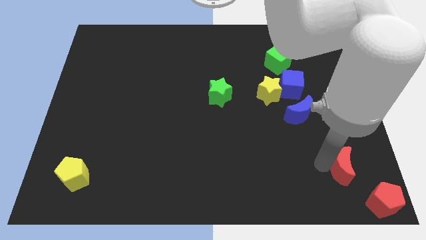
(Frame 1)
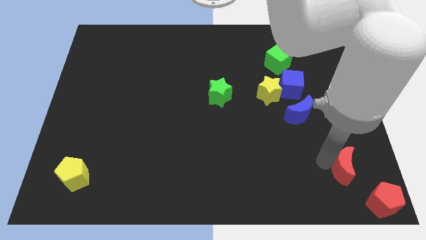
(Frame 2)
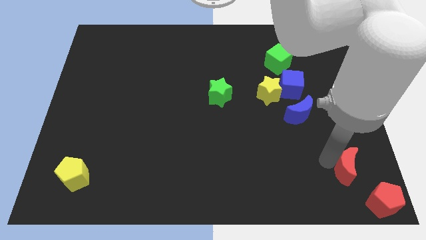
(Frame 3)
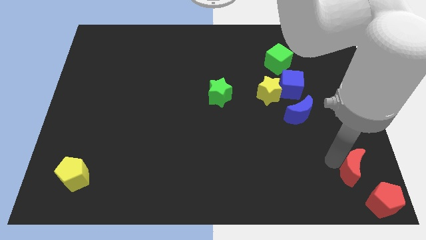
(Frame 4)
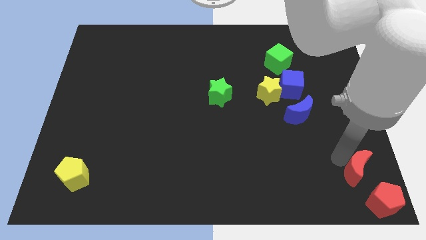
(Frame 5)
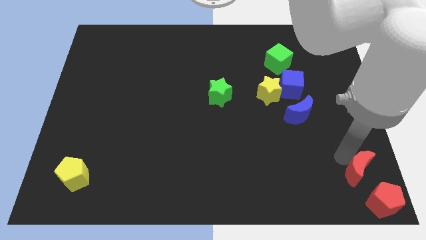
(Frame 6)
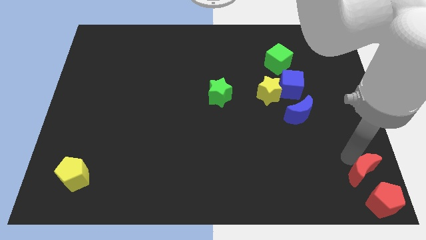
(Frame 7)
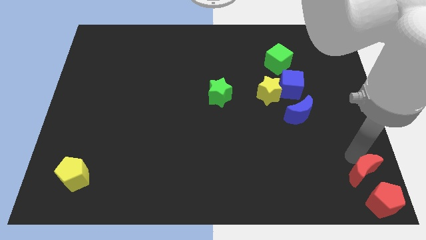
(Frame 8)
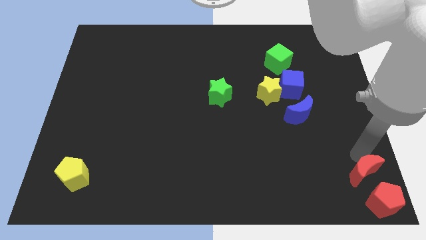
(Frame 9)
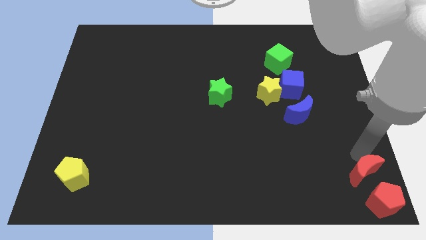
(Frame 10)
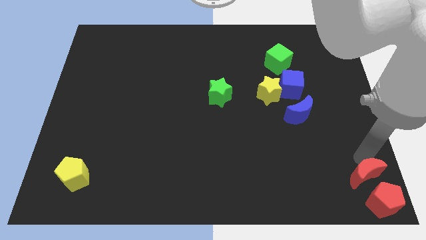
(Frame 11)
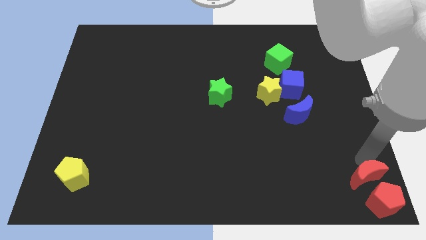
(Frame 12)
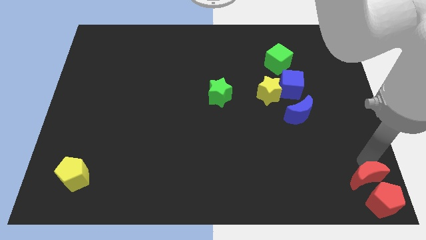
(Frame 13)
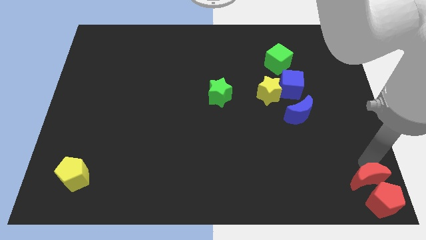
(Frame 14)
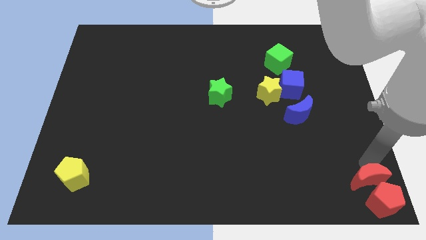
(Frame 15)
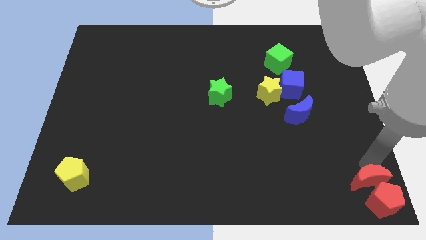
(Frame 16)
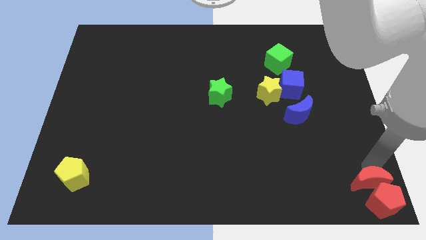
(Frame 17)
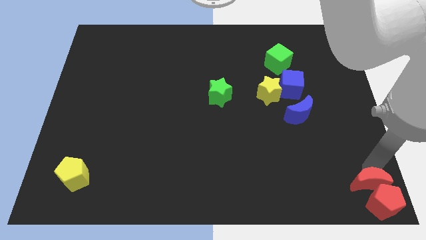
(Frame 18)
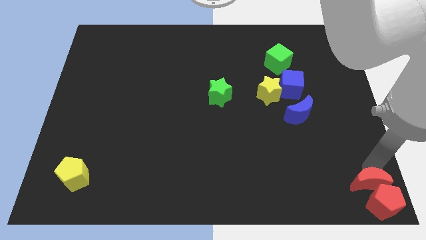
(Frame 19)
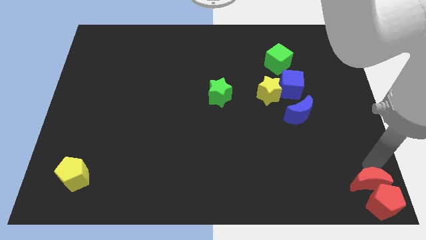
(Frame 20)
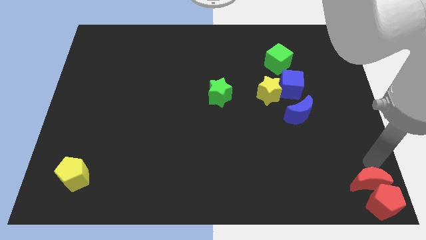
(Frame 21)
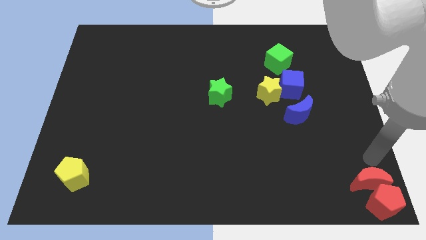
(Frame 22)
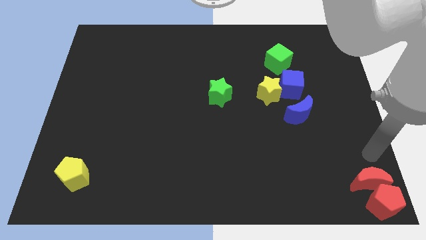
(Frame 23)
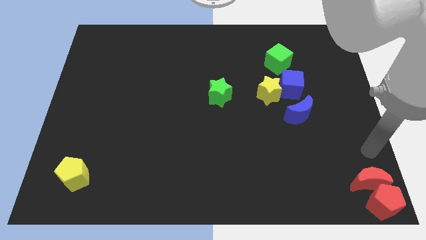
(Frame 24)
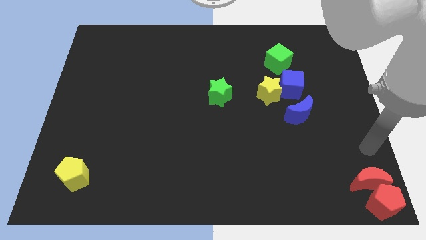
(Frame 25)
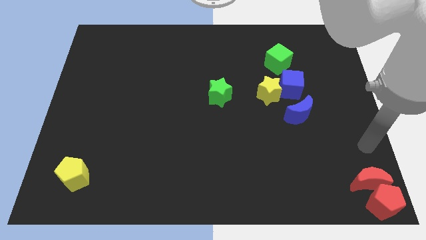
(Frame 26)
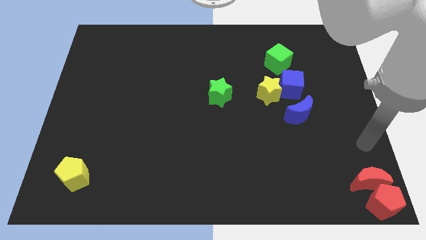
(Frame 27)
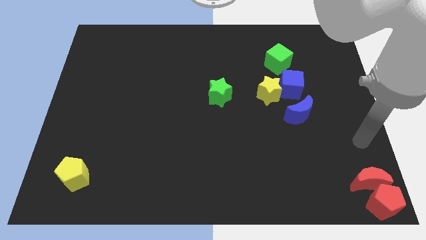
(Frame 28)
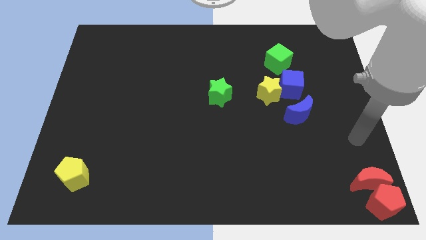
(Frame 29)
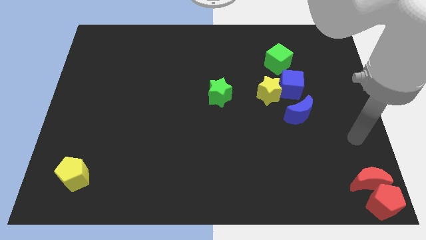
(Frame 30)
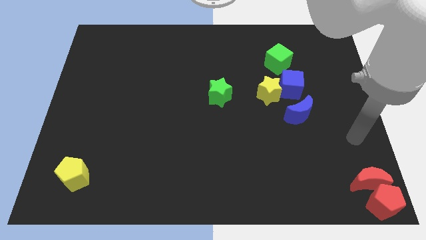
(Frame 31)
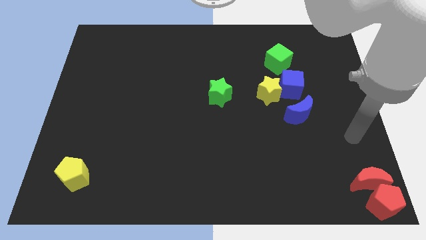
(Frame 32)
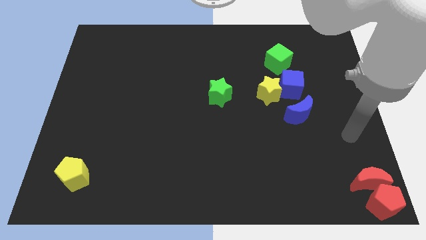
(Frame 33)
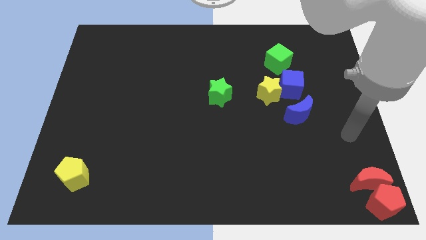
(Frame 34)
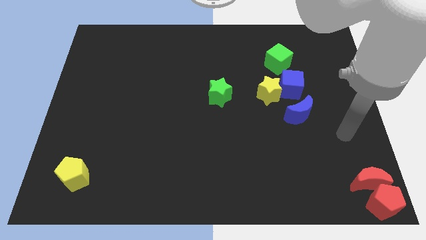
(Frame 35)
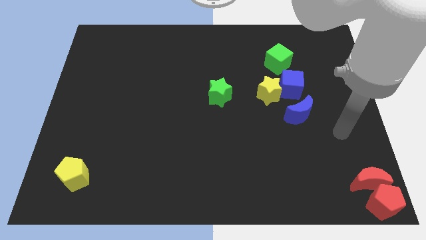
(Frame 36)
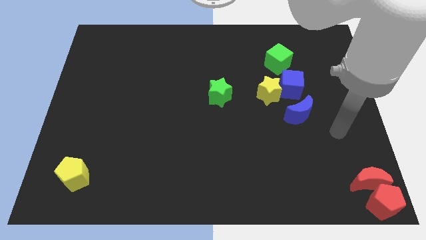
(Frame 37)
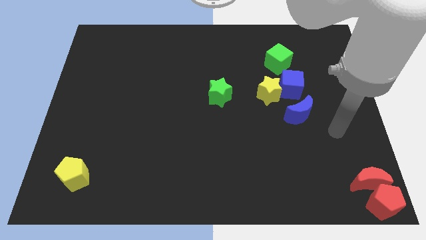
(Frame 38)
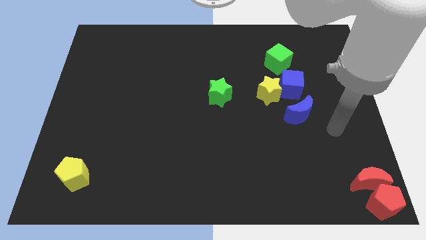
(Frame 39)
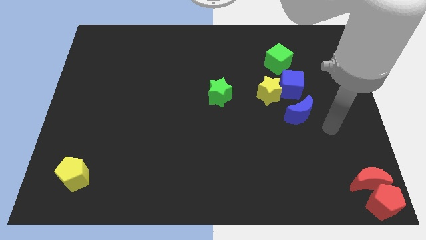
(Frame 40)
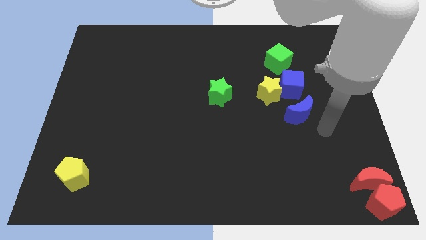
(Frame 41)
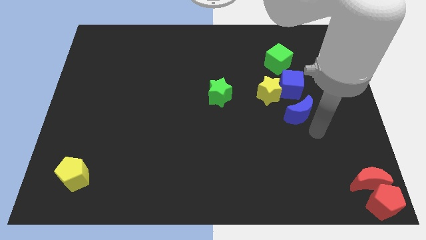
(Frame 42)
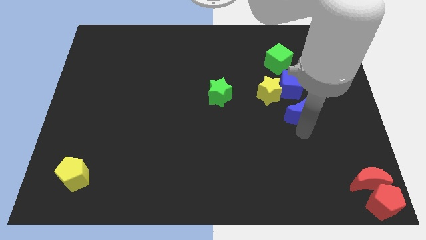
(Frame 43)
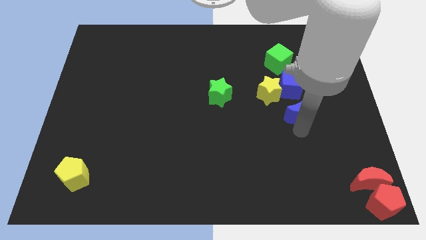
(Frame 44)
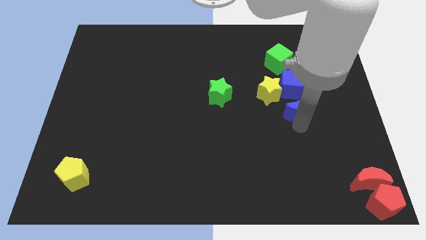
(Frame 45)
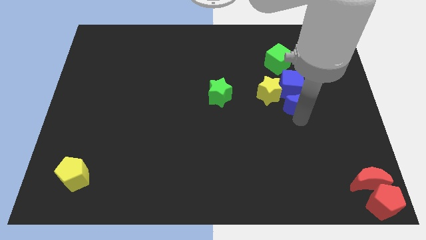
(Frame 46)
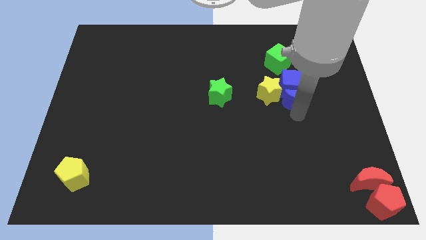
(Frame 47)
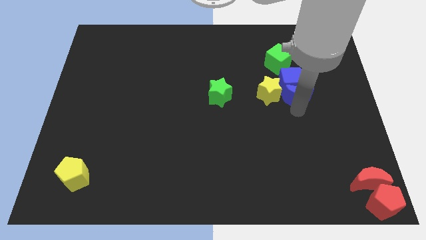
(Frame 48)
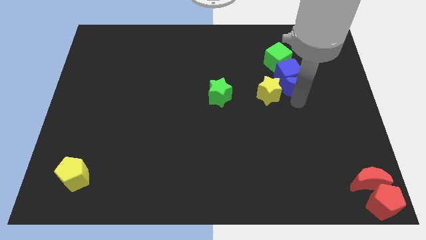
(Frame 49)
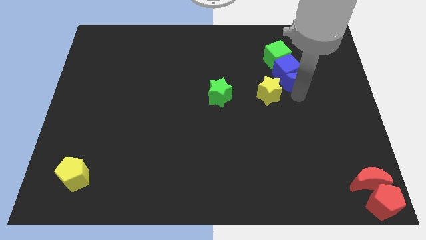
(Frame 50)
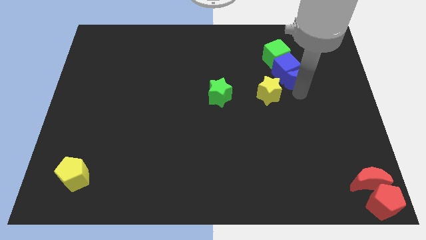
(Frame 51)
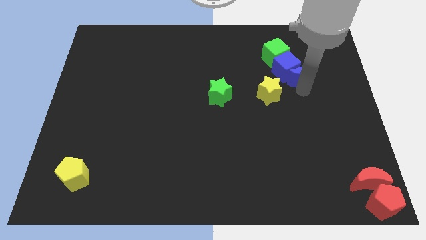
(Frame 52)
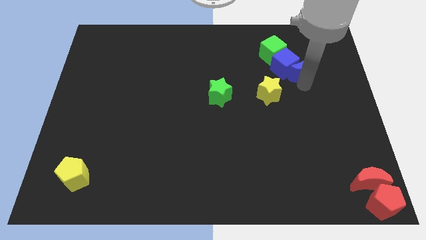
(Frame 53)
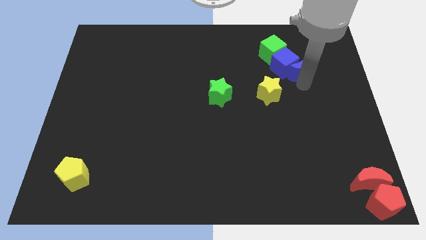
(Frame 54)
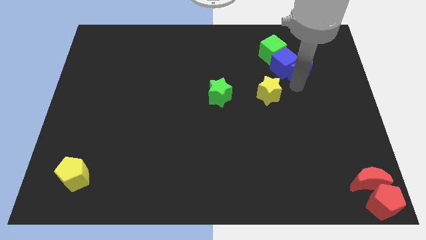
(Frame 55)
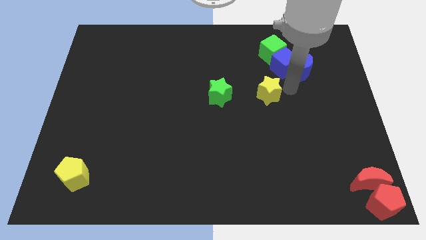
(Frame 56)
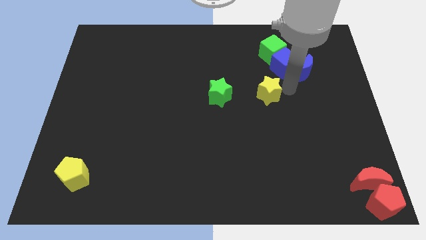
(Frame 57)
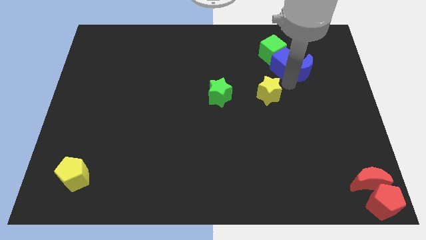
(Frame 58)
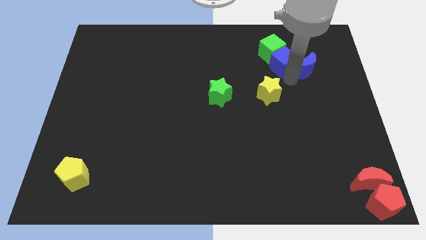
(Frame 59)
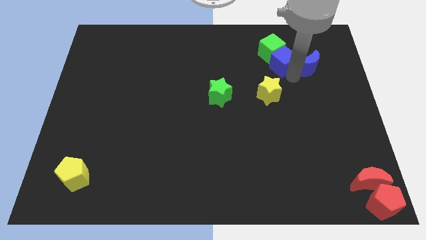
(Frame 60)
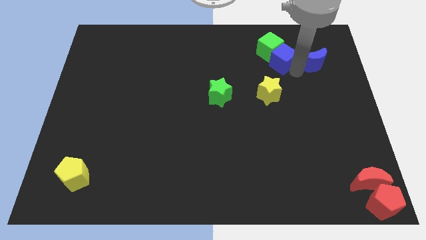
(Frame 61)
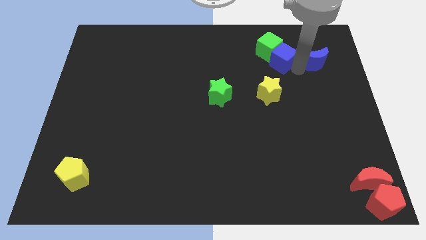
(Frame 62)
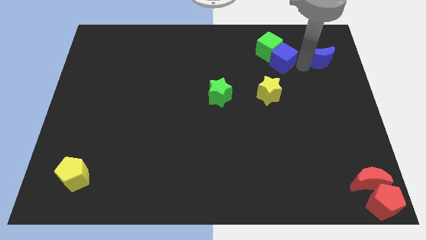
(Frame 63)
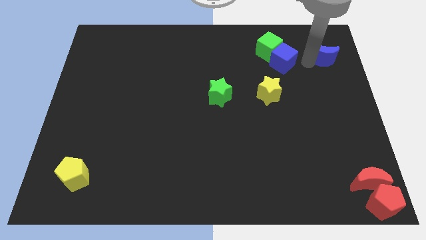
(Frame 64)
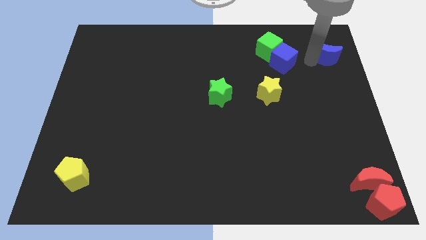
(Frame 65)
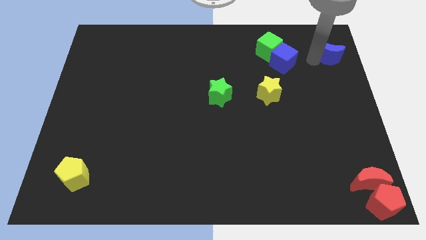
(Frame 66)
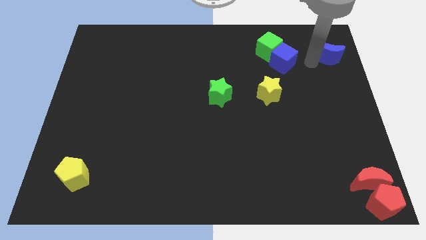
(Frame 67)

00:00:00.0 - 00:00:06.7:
slide the blue moon towards the top right of the board

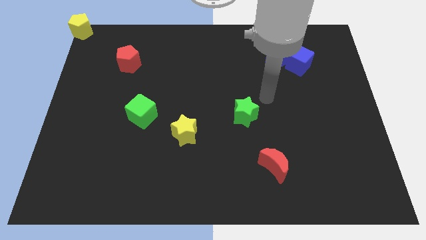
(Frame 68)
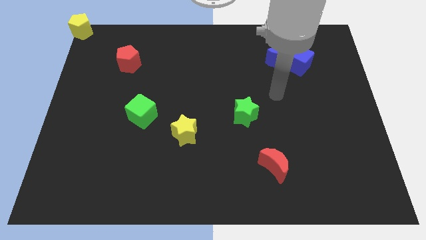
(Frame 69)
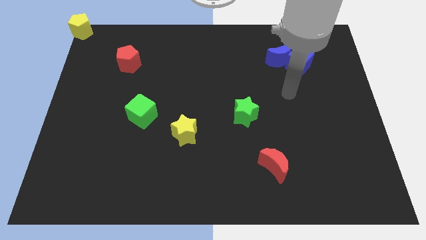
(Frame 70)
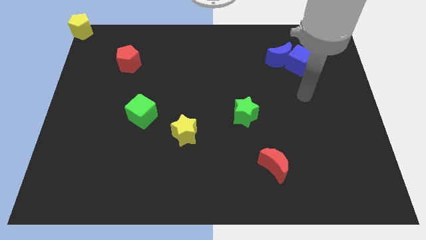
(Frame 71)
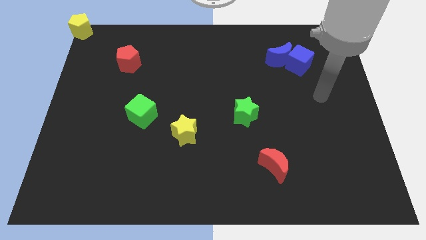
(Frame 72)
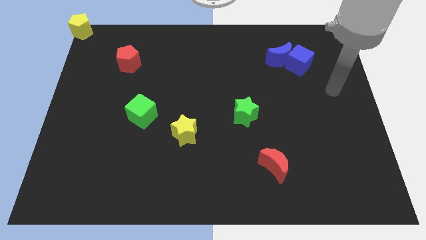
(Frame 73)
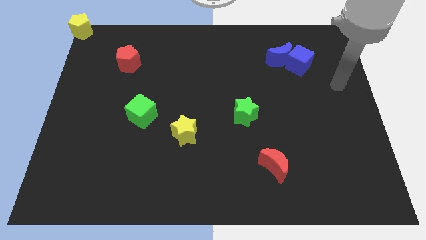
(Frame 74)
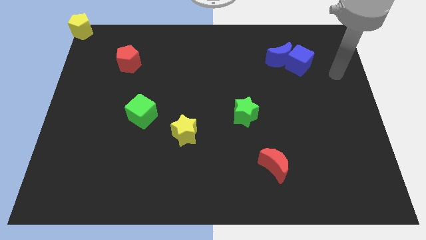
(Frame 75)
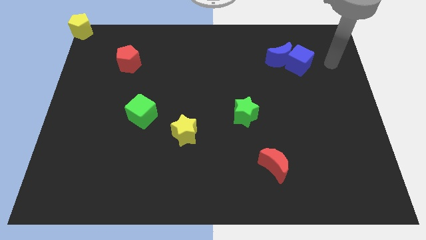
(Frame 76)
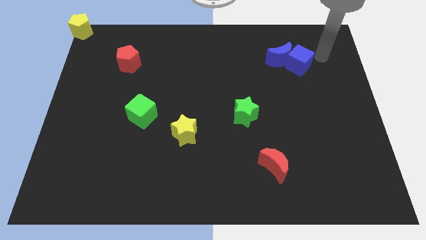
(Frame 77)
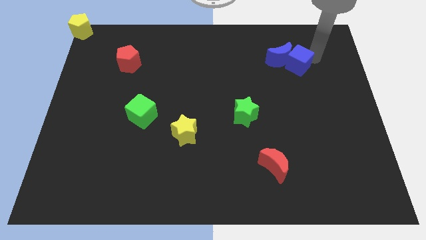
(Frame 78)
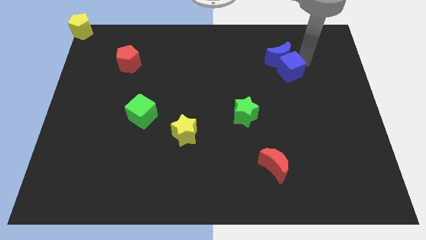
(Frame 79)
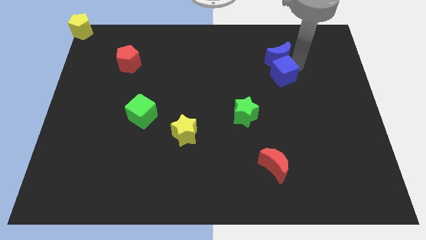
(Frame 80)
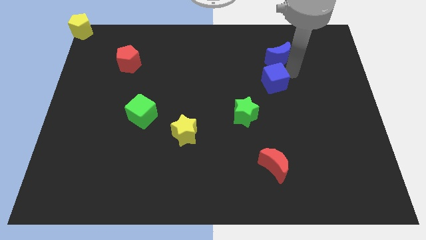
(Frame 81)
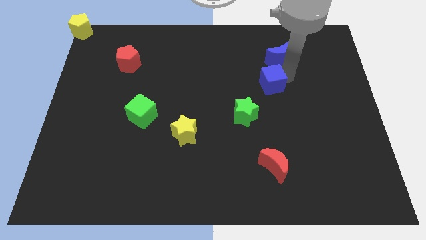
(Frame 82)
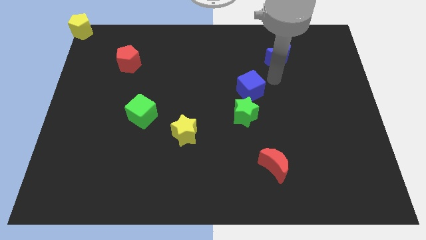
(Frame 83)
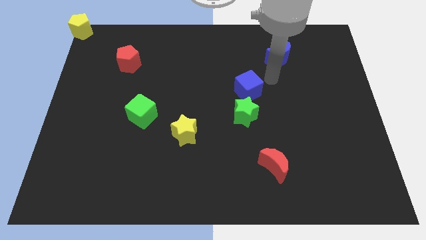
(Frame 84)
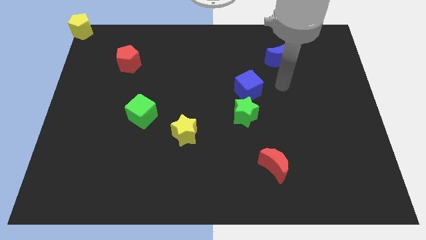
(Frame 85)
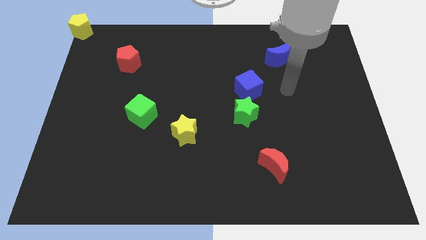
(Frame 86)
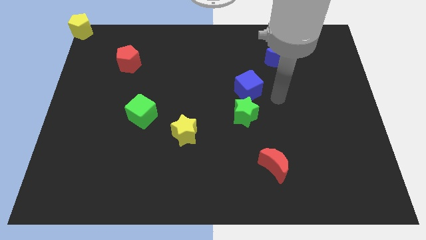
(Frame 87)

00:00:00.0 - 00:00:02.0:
place blue cube on top of green star

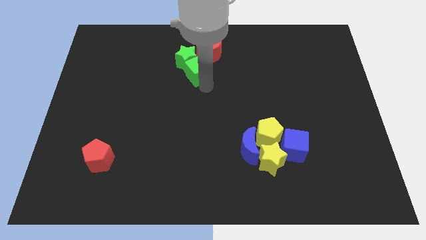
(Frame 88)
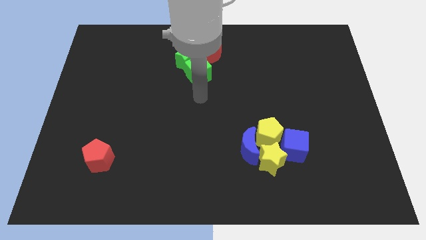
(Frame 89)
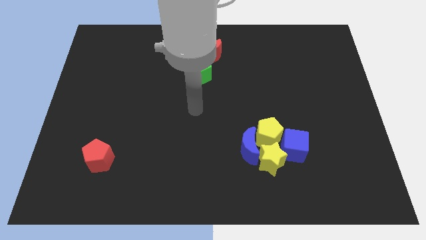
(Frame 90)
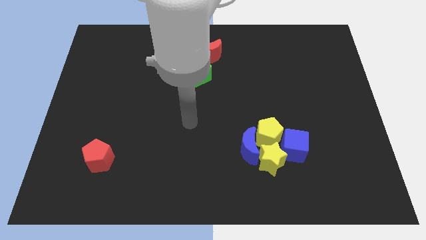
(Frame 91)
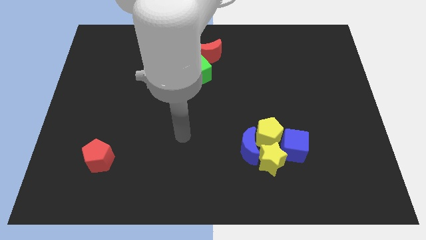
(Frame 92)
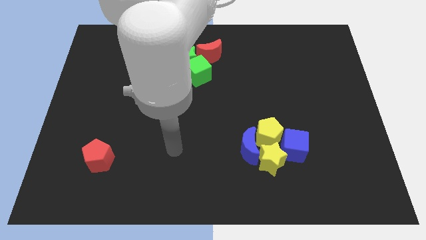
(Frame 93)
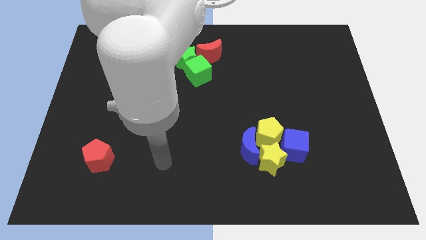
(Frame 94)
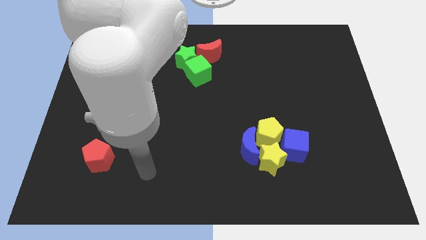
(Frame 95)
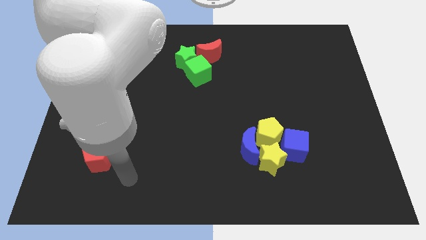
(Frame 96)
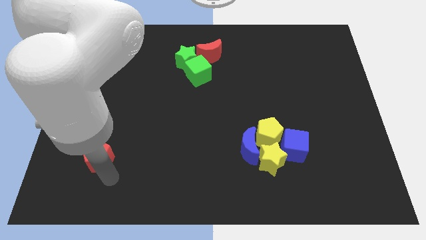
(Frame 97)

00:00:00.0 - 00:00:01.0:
move away from the green cube
